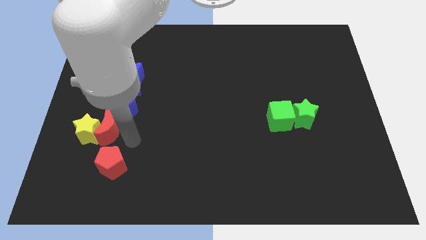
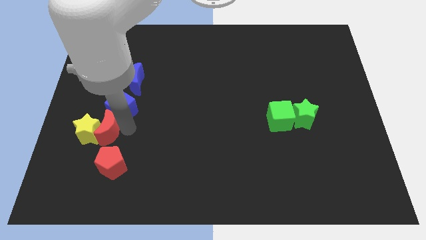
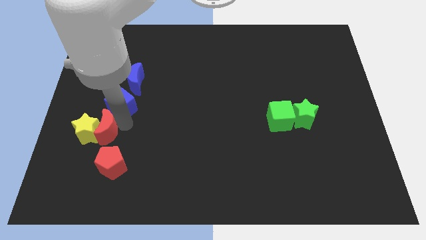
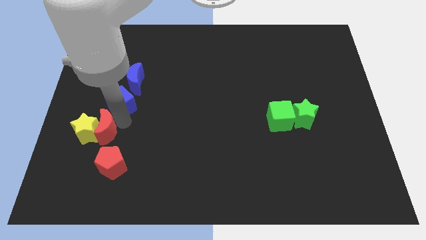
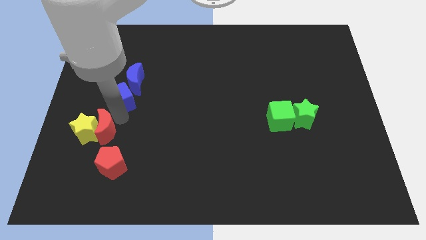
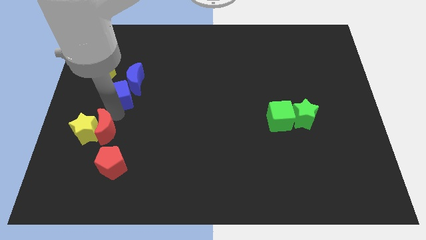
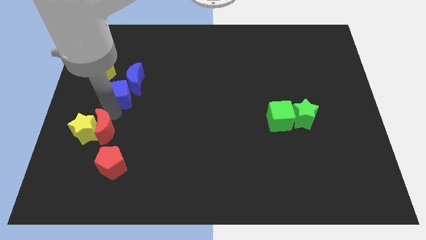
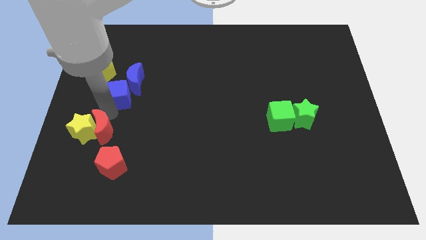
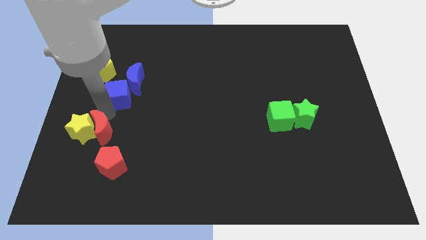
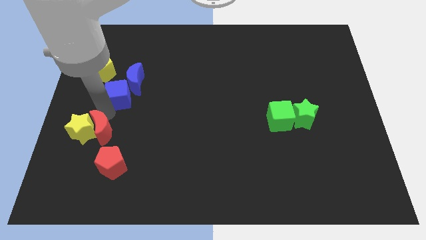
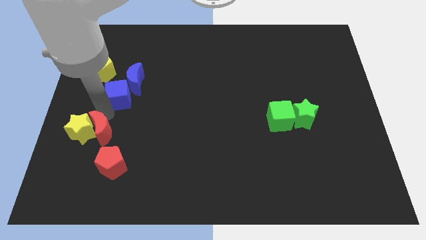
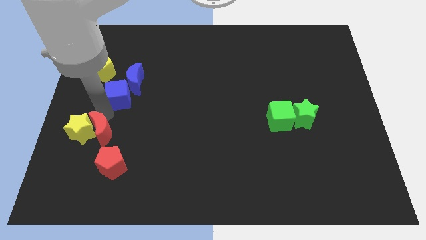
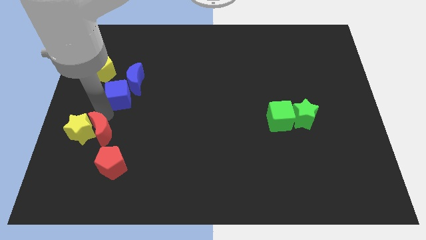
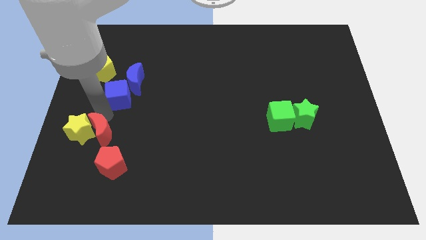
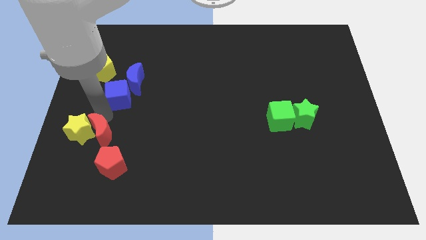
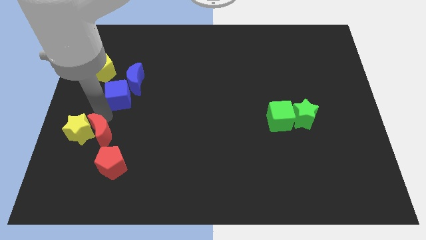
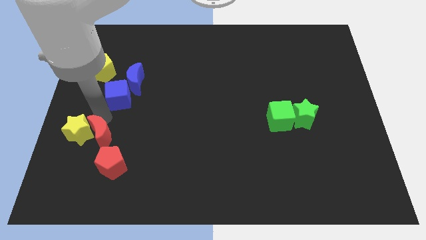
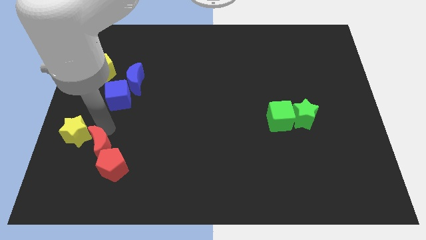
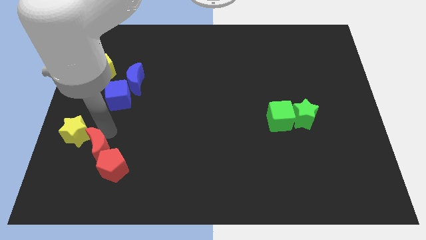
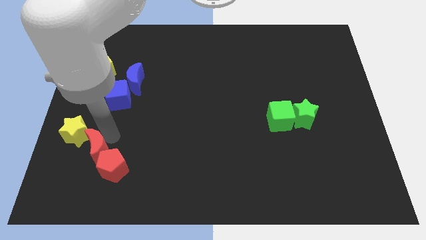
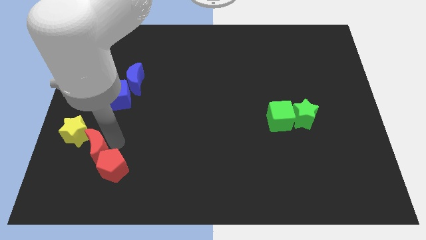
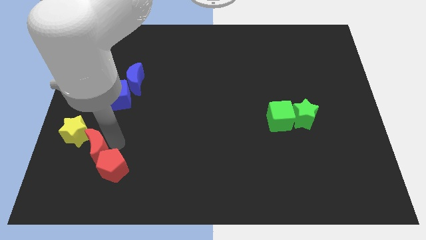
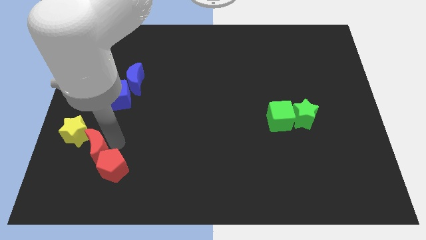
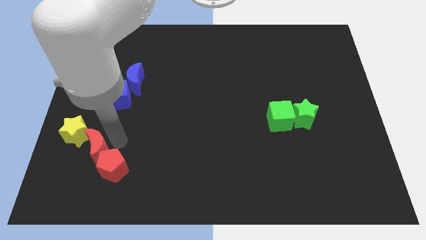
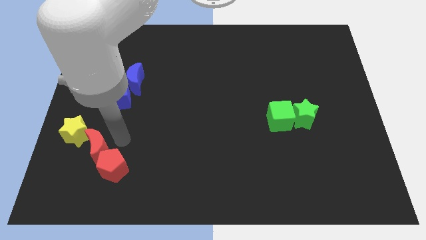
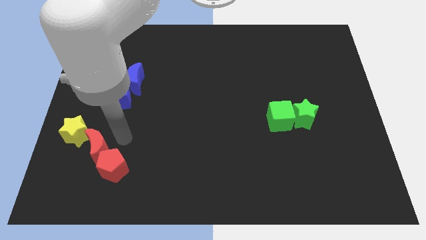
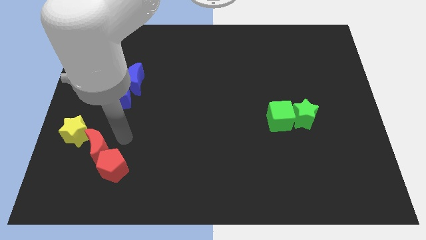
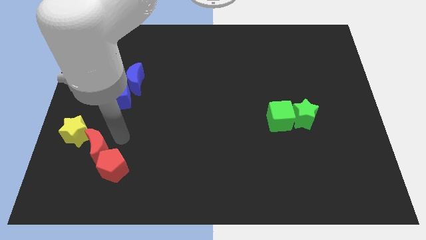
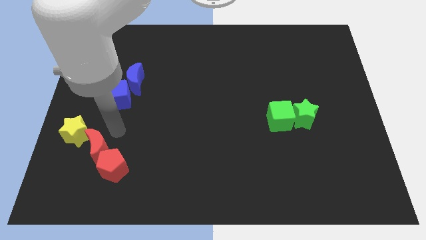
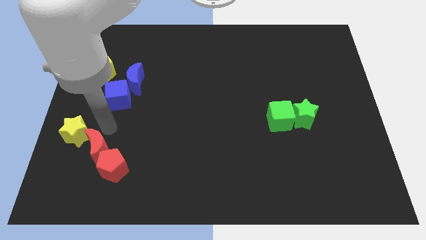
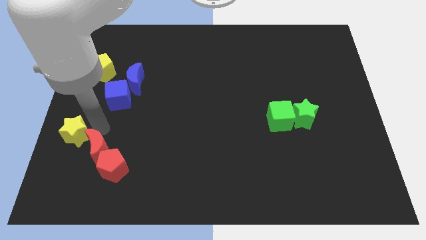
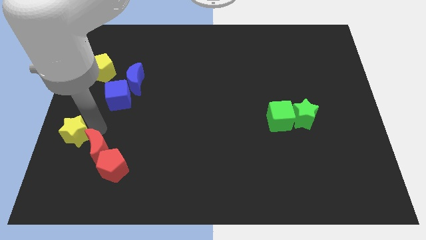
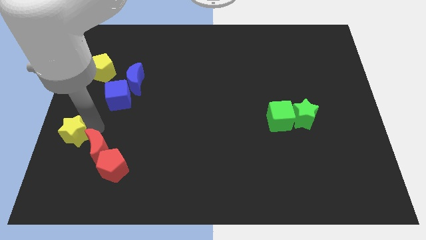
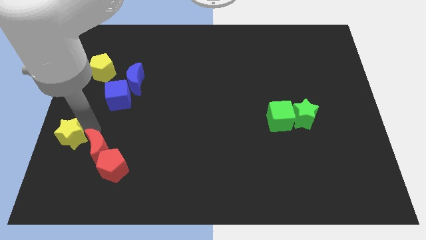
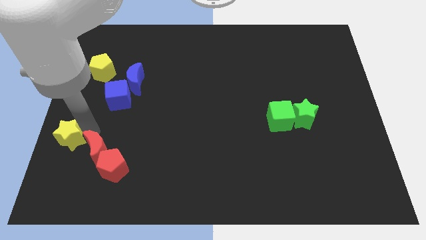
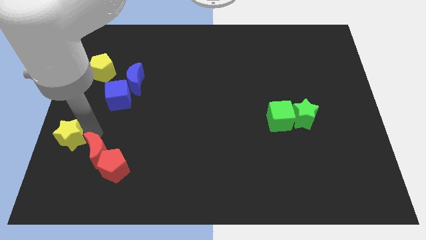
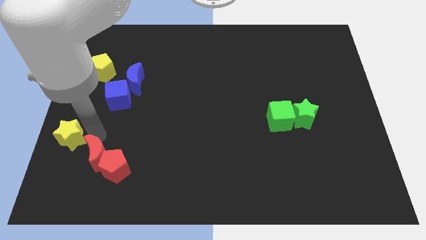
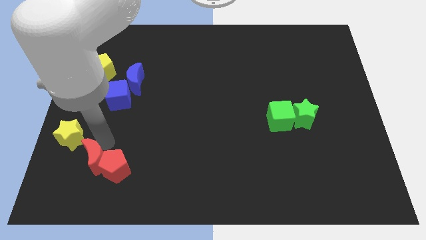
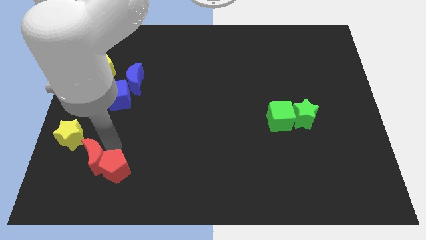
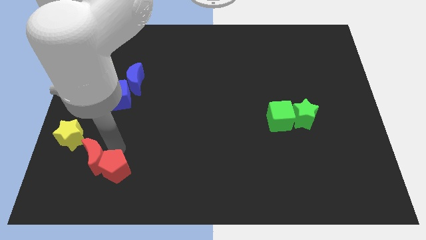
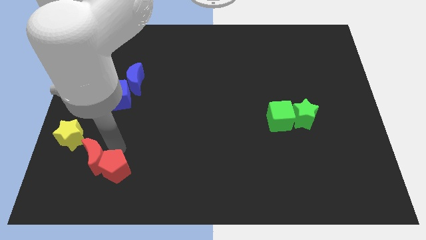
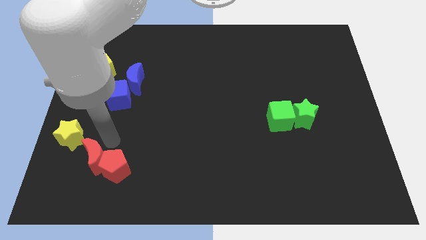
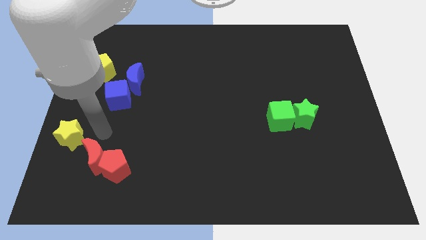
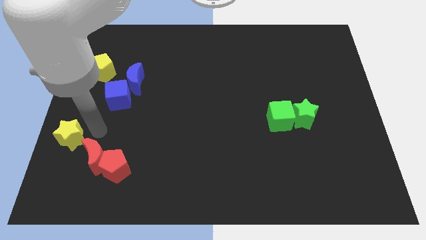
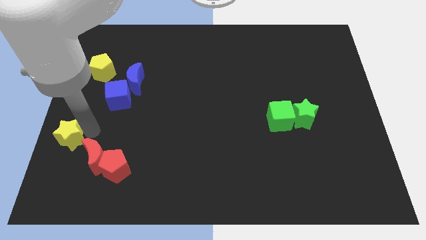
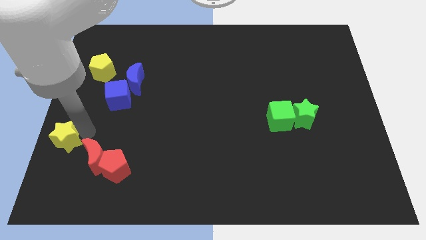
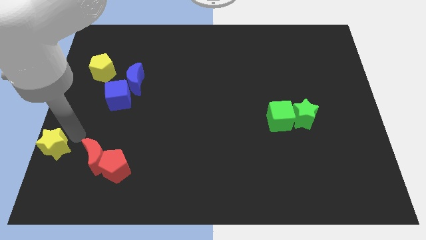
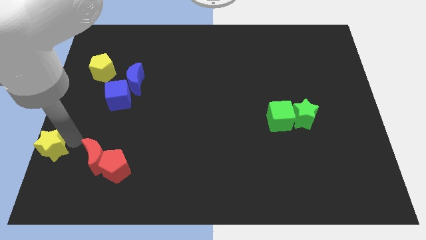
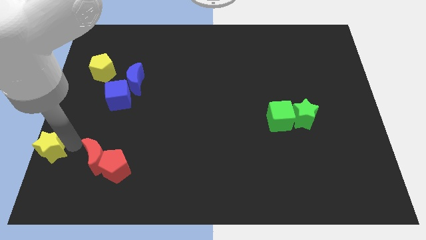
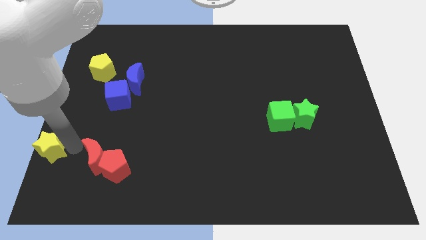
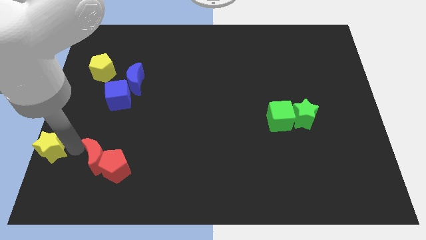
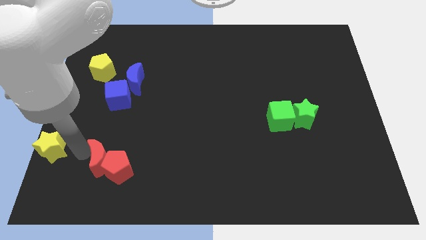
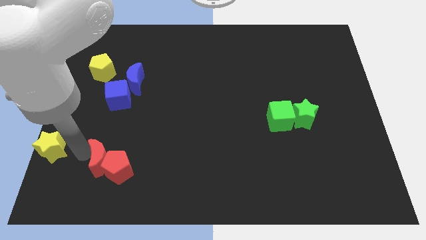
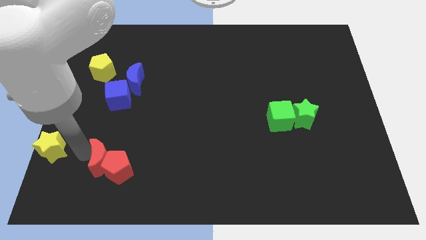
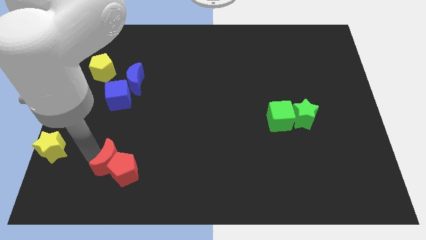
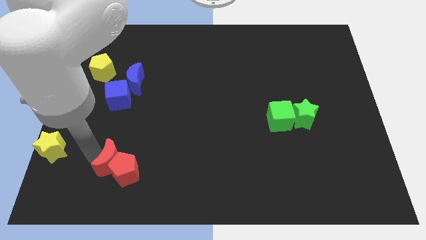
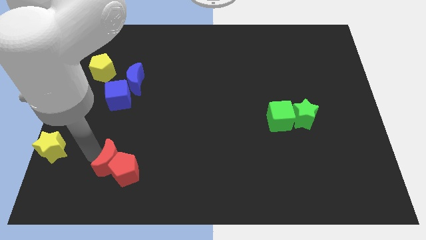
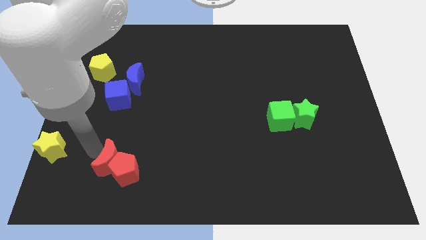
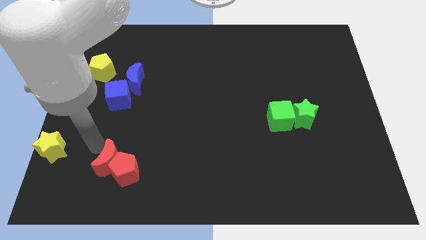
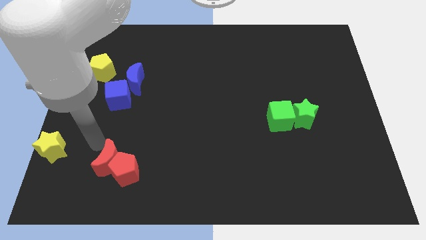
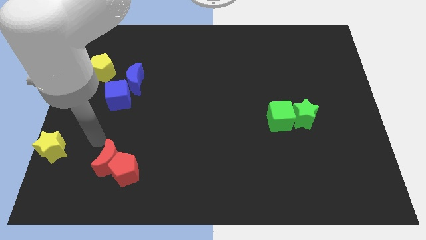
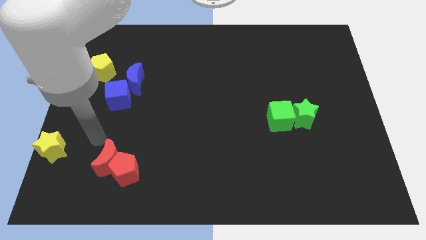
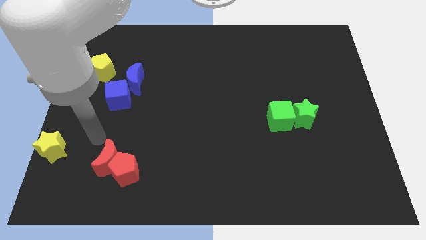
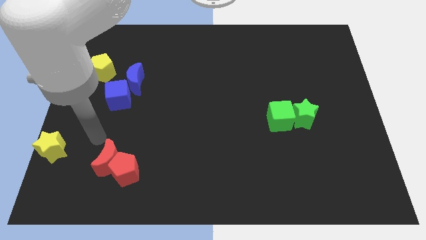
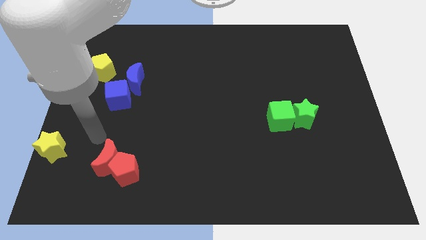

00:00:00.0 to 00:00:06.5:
push the red crescent into the red pentagon

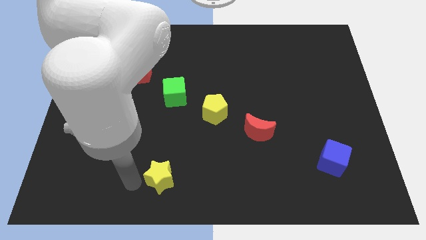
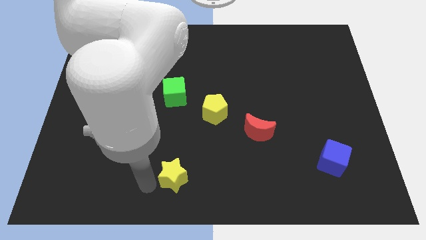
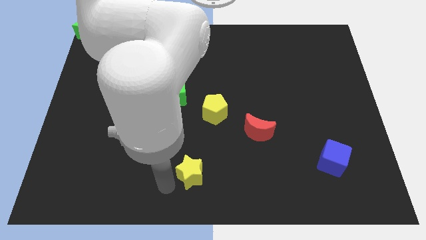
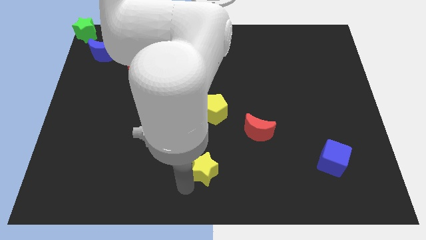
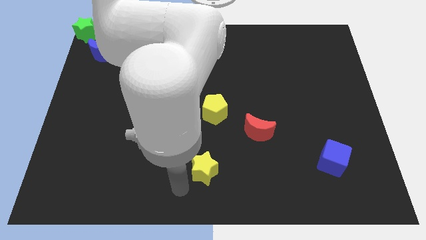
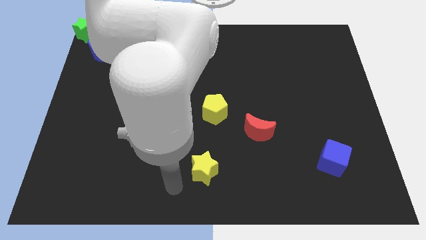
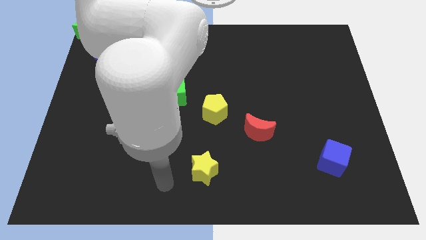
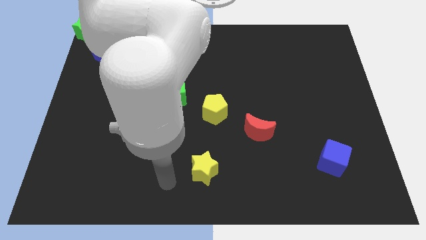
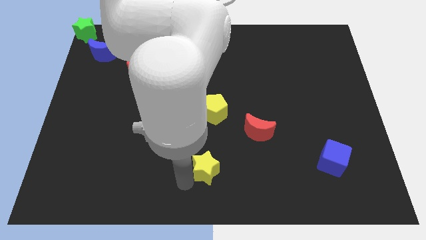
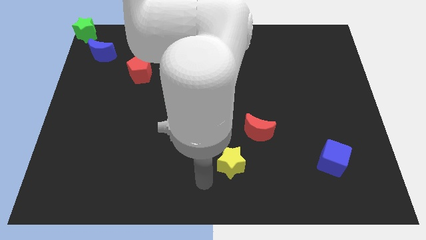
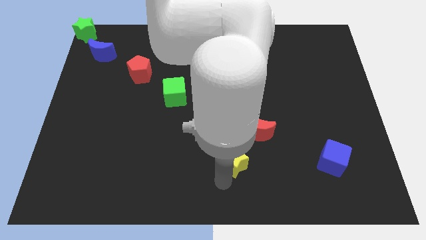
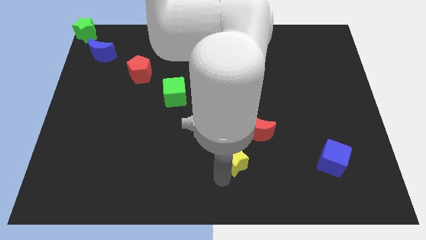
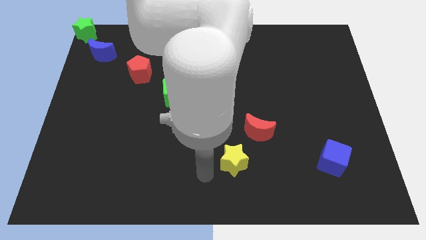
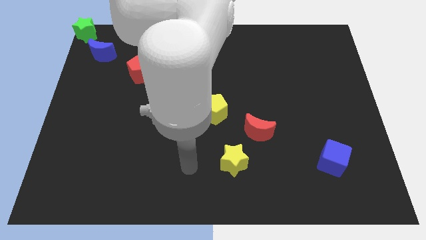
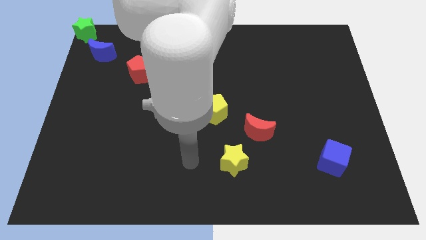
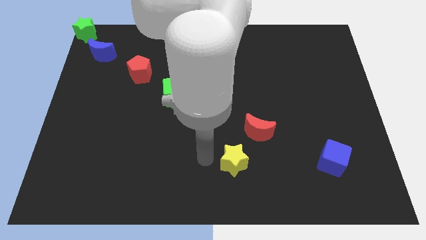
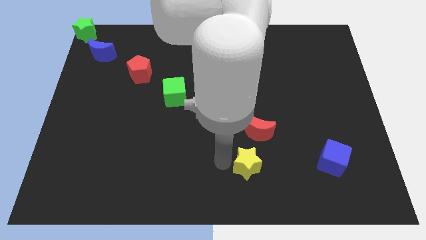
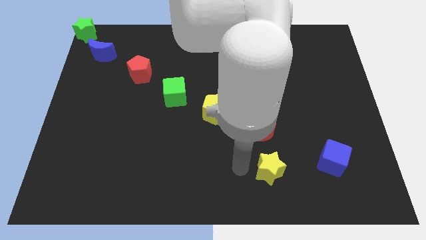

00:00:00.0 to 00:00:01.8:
place the yellow star below red crescent

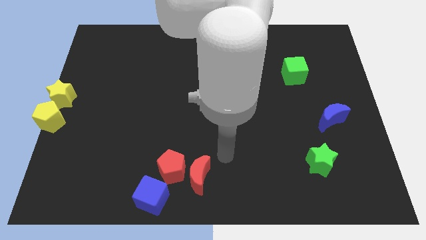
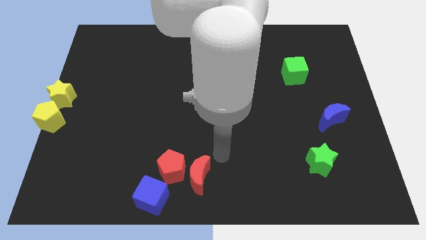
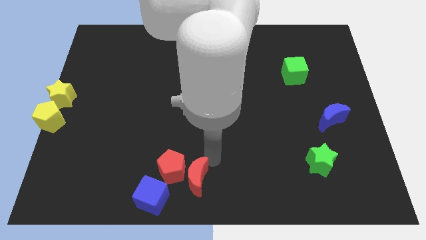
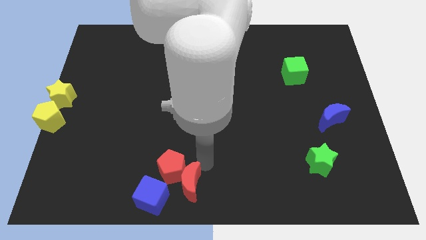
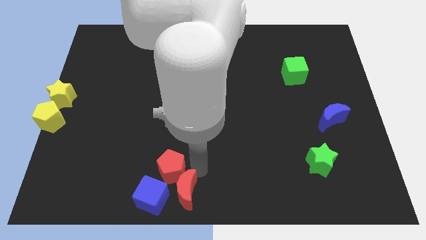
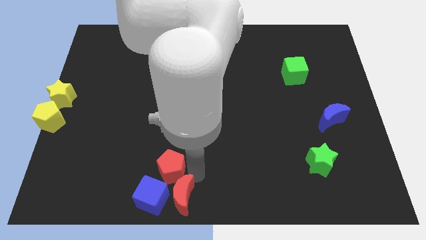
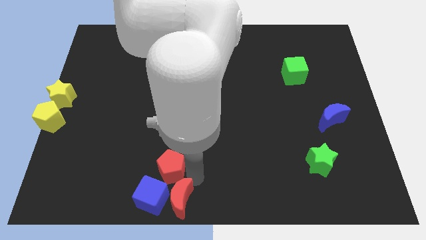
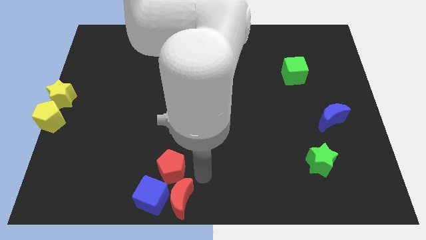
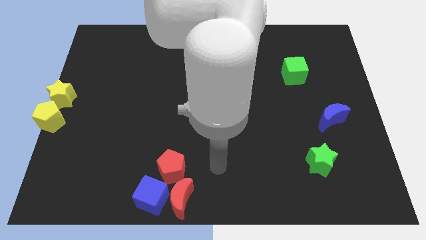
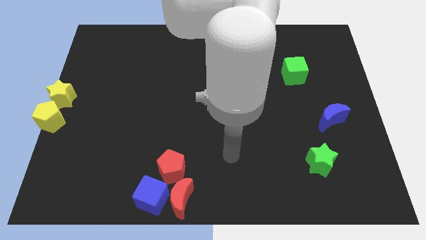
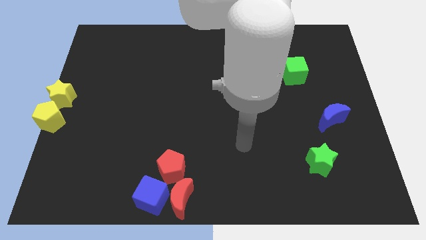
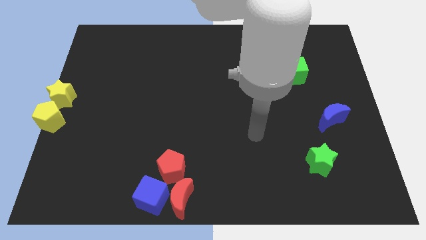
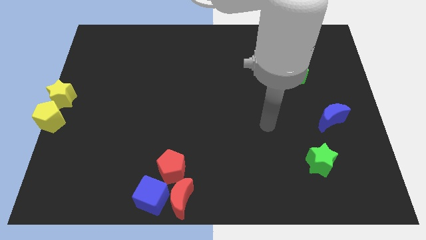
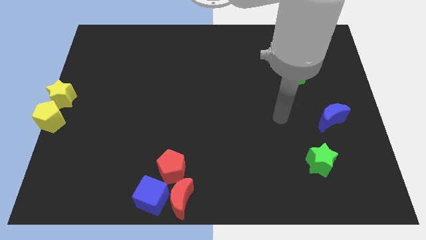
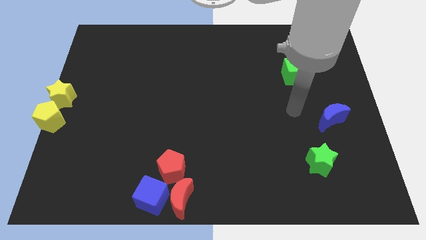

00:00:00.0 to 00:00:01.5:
move the red moon to the right of the blue cube
